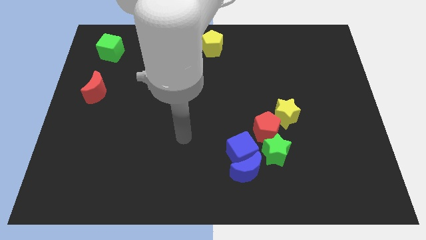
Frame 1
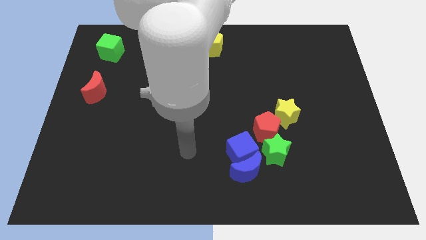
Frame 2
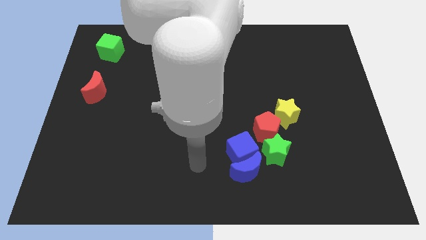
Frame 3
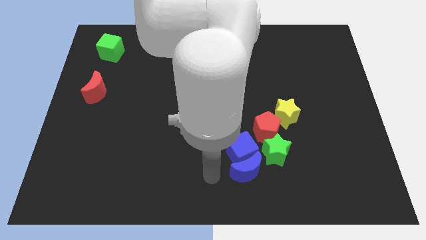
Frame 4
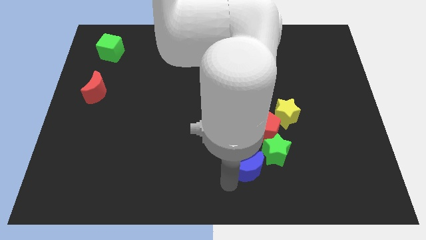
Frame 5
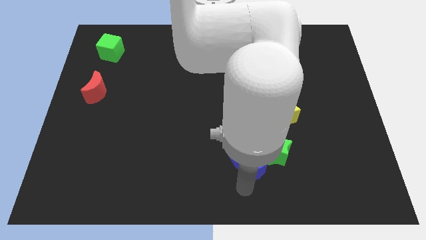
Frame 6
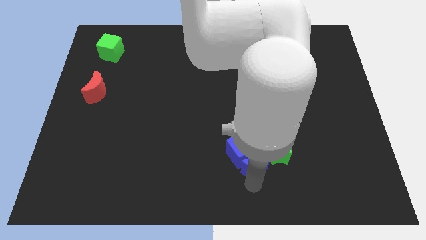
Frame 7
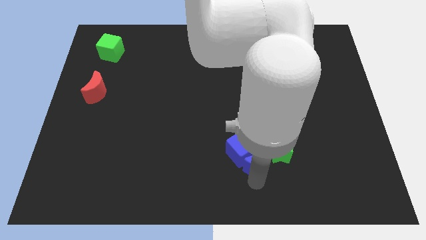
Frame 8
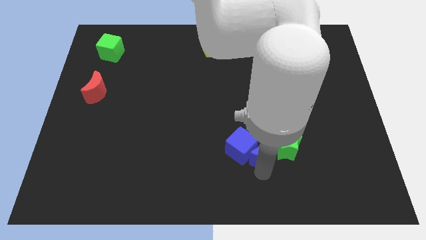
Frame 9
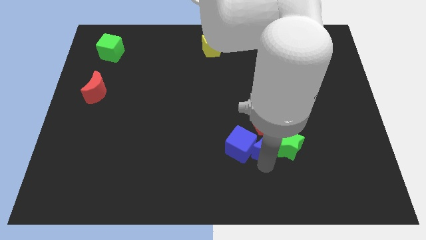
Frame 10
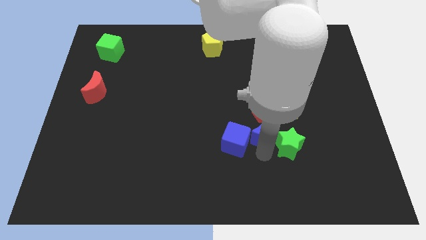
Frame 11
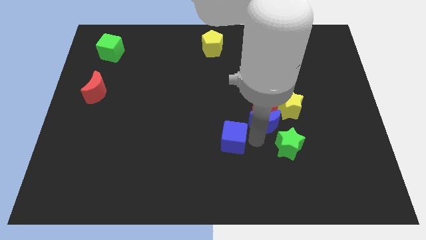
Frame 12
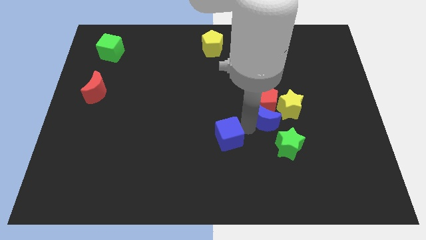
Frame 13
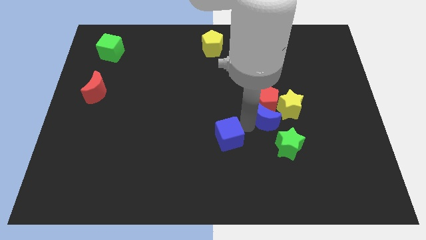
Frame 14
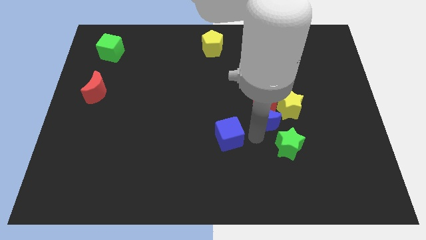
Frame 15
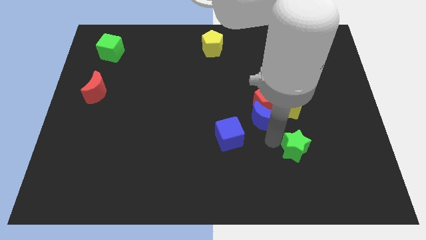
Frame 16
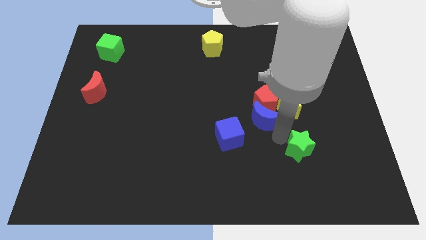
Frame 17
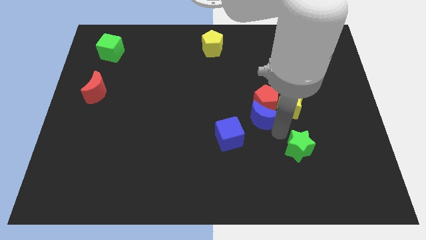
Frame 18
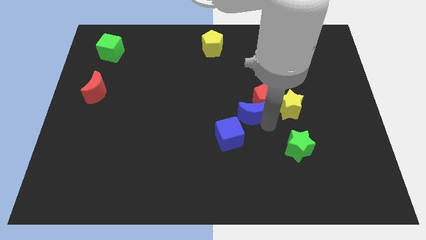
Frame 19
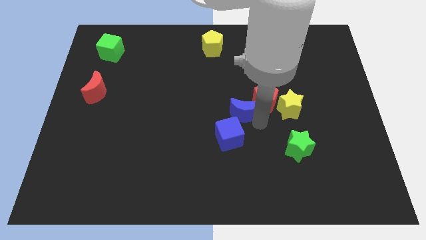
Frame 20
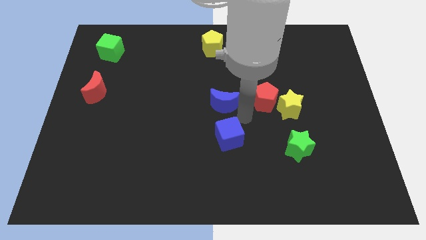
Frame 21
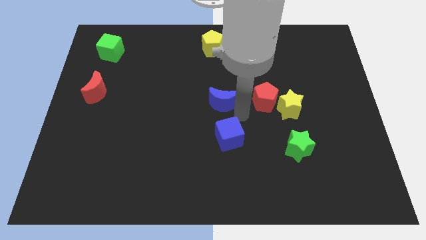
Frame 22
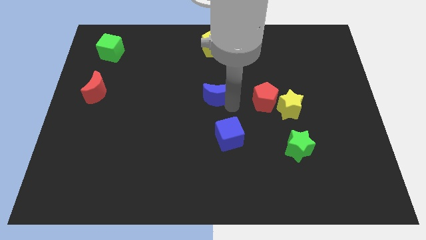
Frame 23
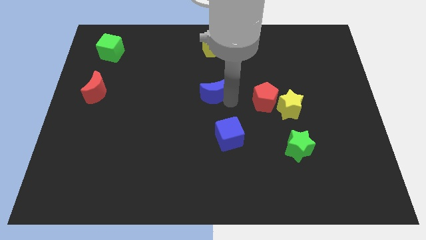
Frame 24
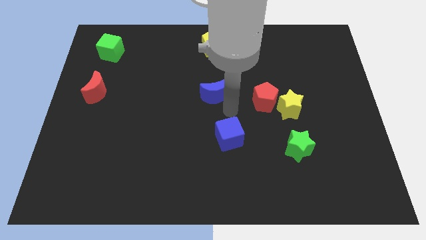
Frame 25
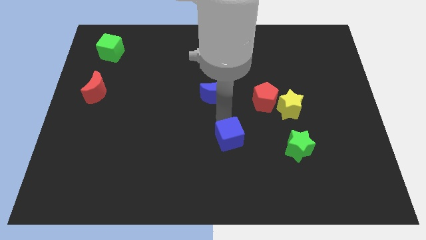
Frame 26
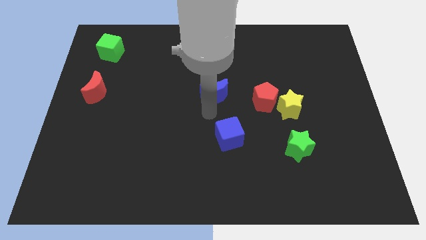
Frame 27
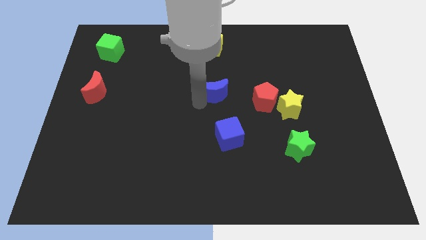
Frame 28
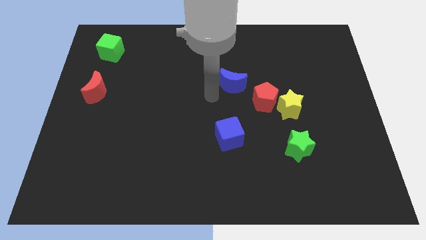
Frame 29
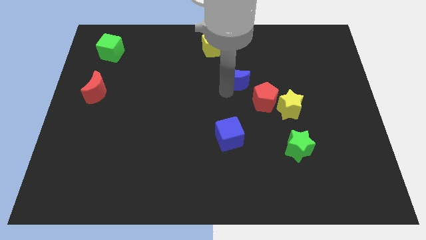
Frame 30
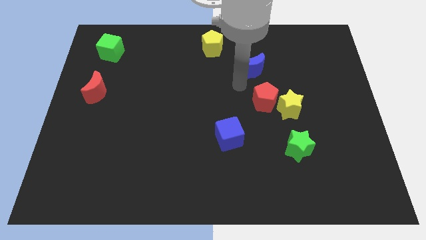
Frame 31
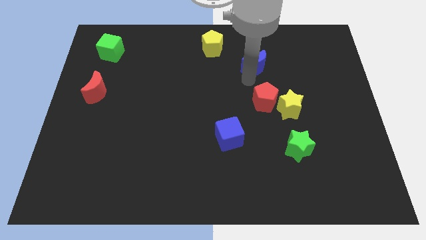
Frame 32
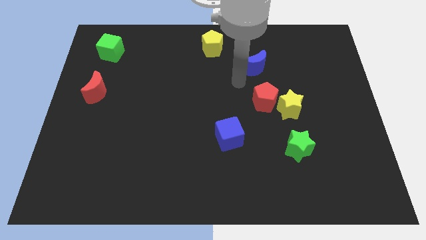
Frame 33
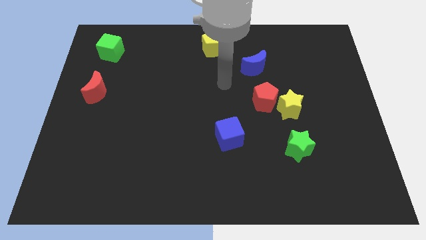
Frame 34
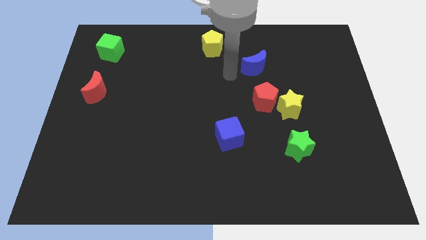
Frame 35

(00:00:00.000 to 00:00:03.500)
drag blue cube towards top

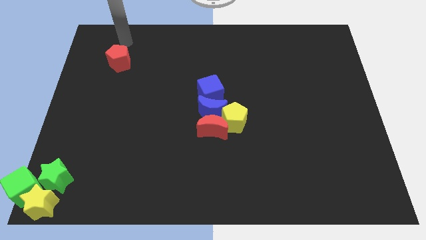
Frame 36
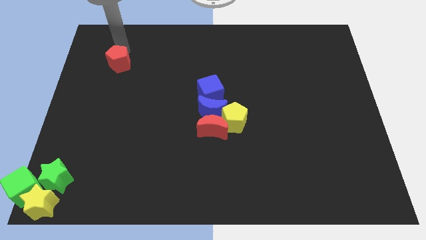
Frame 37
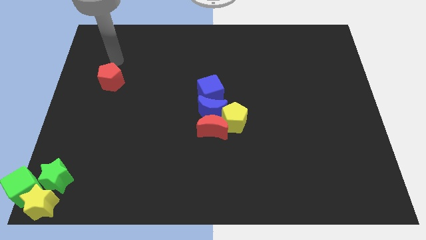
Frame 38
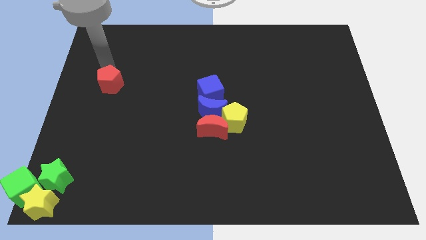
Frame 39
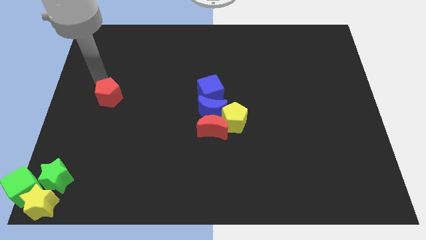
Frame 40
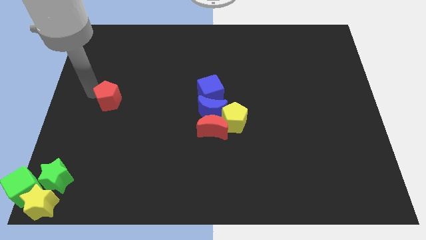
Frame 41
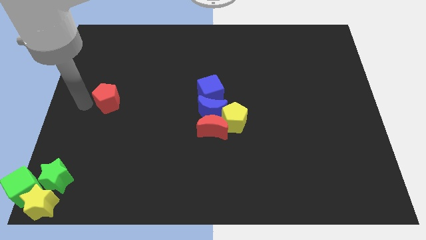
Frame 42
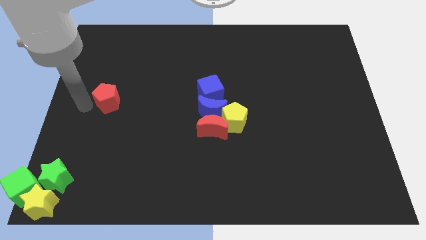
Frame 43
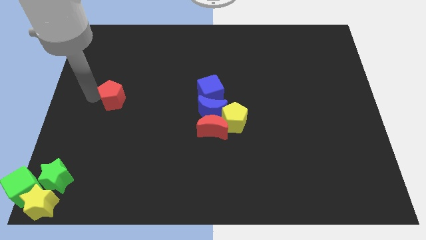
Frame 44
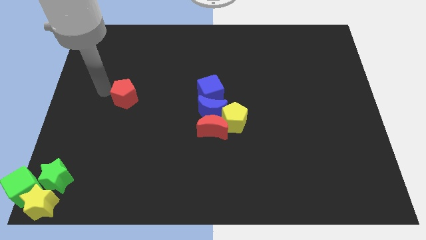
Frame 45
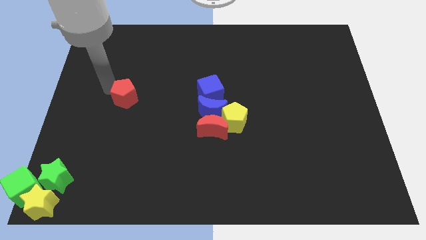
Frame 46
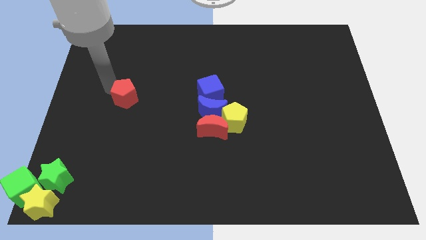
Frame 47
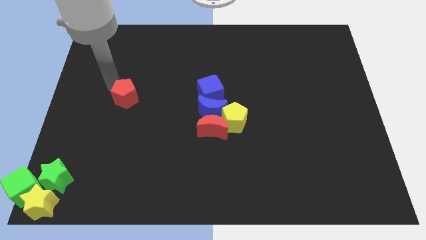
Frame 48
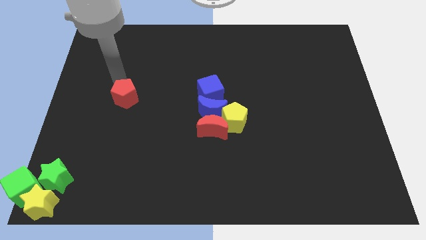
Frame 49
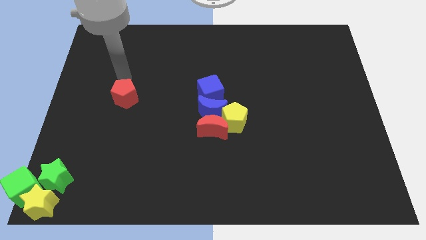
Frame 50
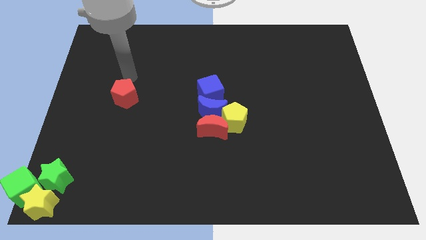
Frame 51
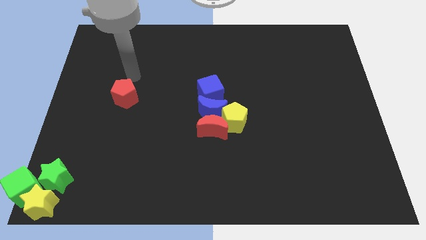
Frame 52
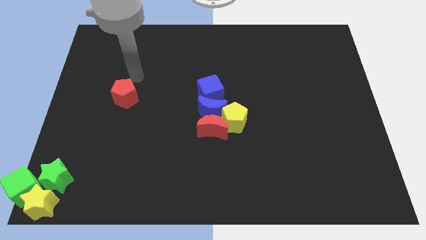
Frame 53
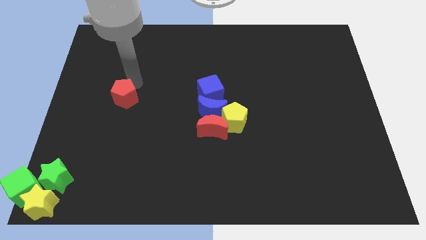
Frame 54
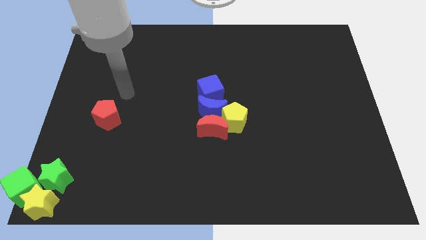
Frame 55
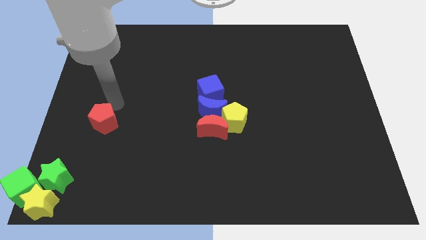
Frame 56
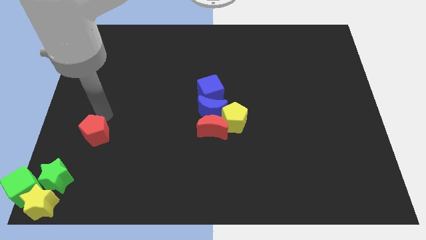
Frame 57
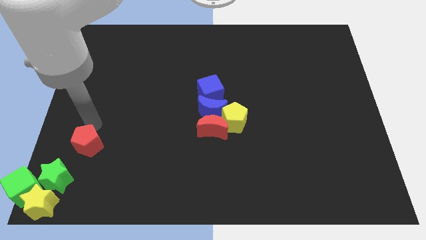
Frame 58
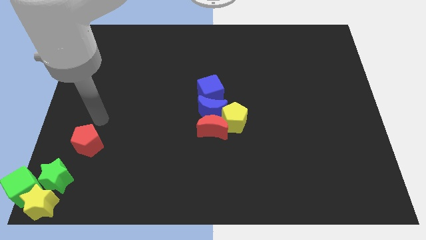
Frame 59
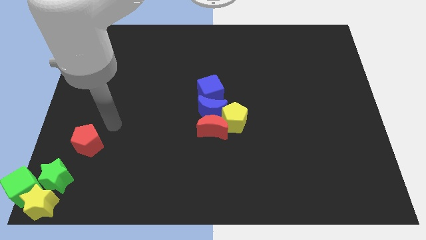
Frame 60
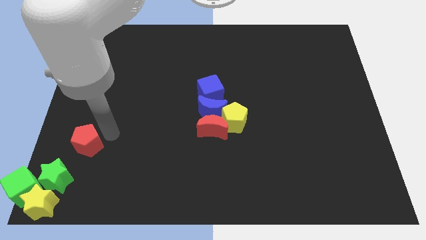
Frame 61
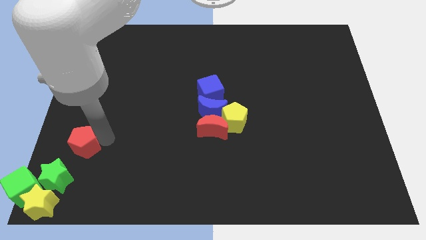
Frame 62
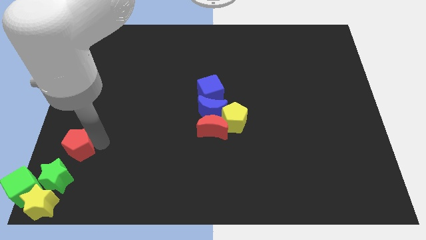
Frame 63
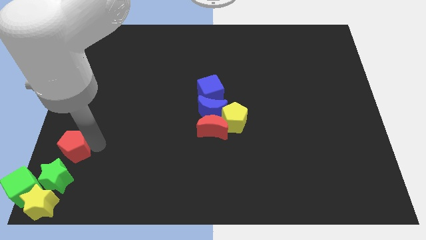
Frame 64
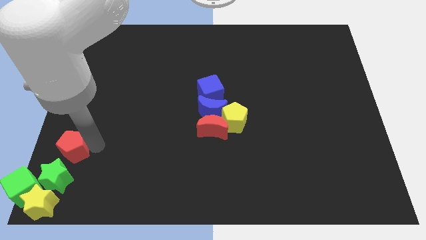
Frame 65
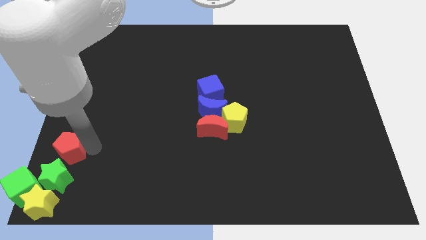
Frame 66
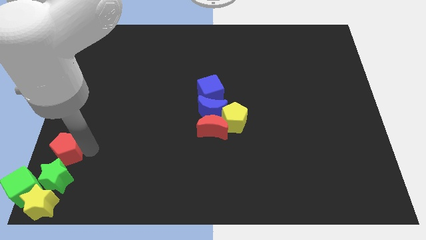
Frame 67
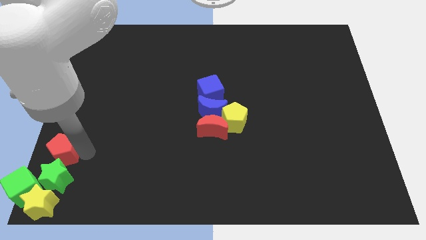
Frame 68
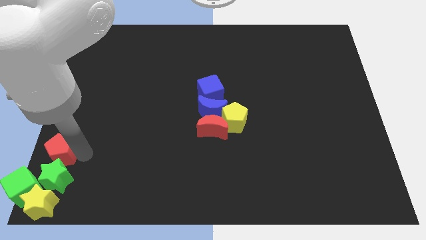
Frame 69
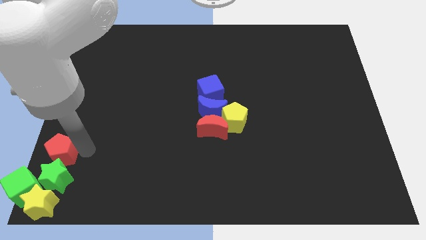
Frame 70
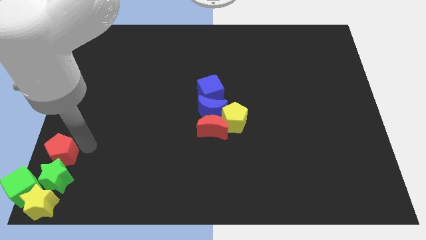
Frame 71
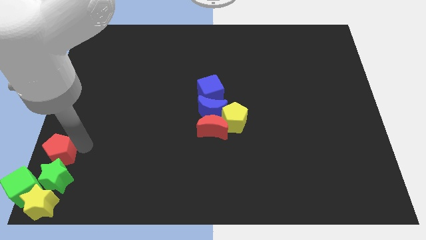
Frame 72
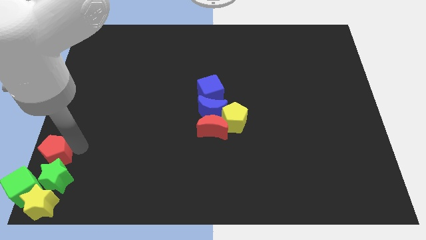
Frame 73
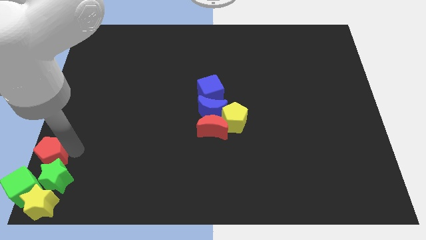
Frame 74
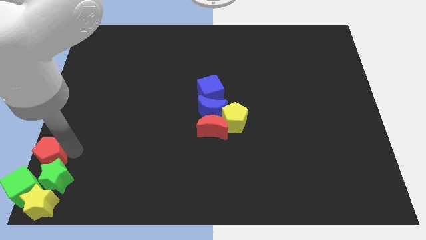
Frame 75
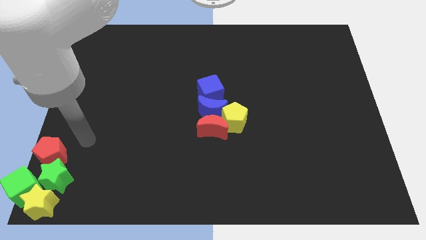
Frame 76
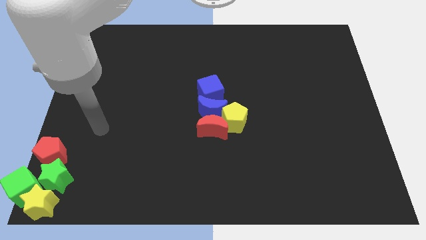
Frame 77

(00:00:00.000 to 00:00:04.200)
move the red pentagon into the green star

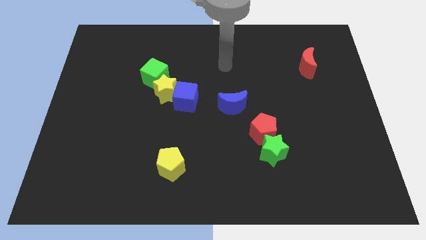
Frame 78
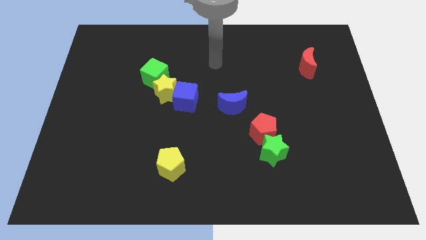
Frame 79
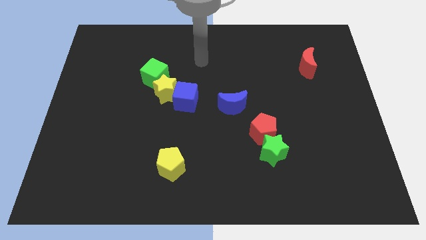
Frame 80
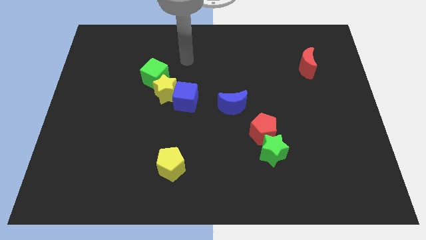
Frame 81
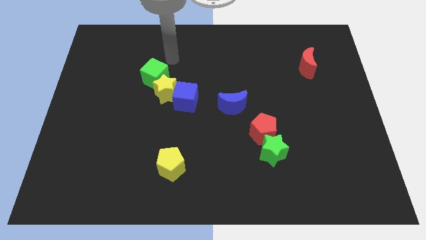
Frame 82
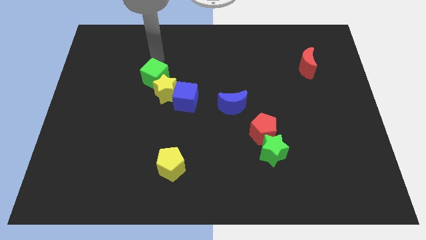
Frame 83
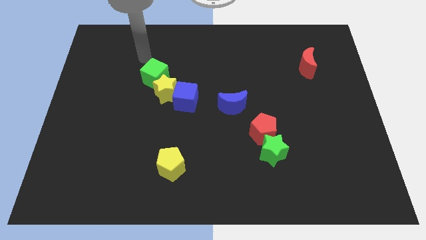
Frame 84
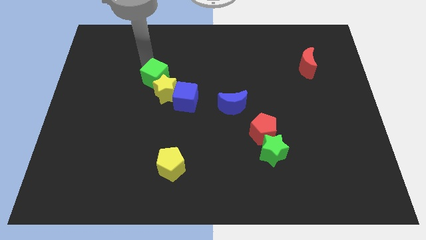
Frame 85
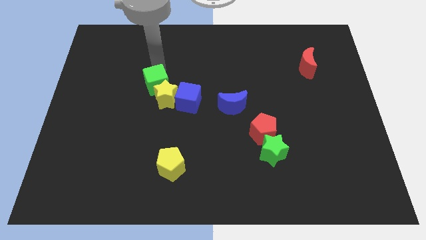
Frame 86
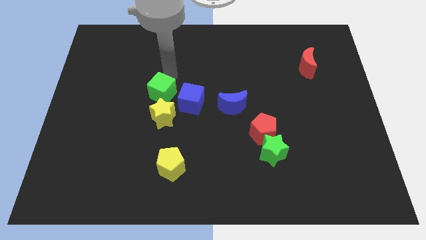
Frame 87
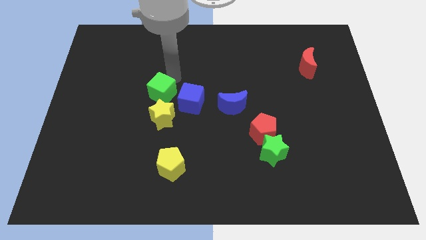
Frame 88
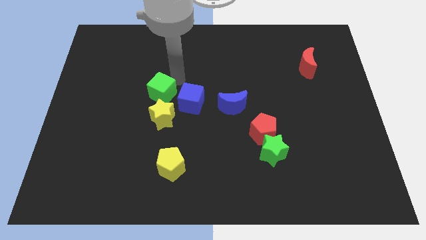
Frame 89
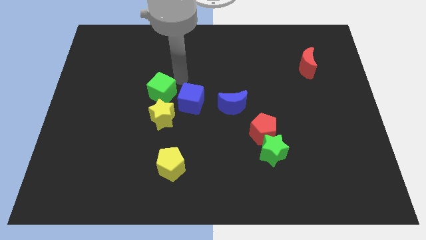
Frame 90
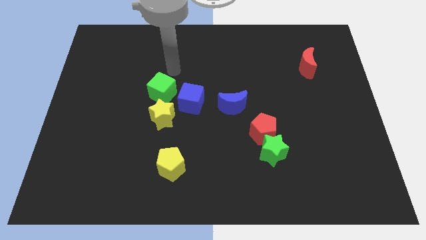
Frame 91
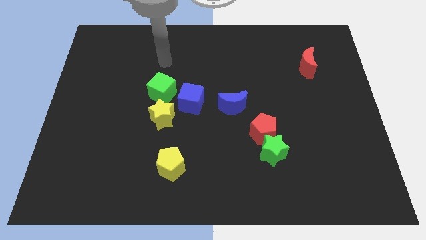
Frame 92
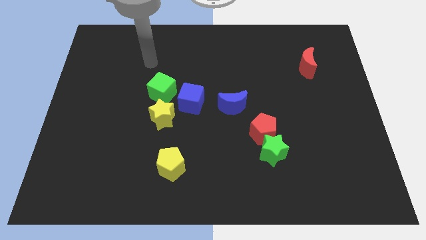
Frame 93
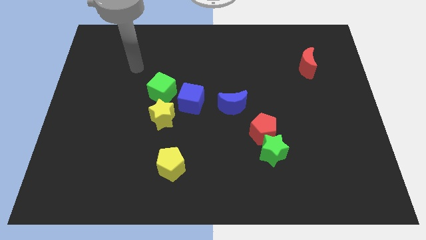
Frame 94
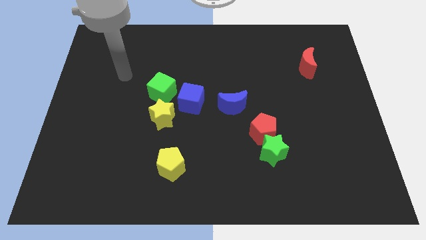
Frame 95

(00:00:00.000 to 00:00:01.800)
push the yellow star with the help of green cube towards down side
